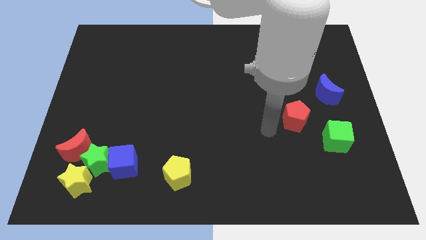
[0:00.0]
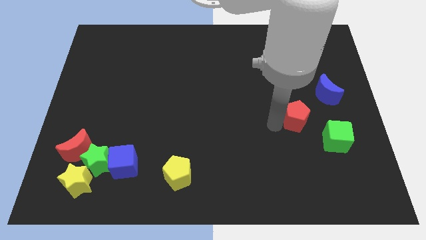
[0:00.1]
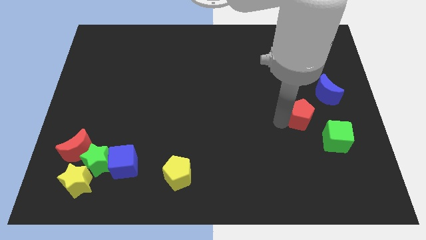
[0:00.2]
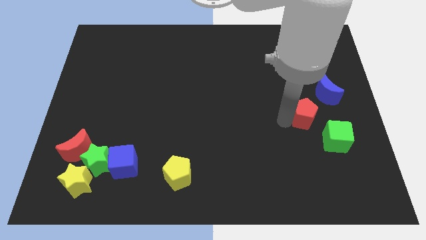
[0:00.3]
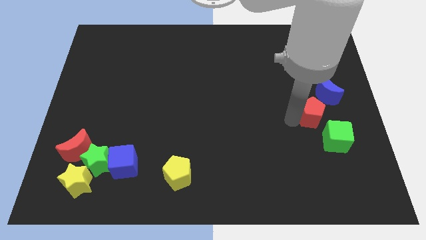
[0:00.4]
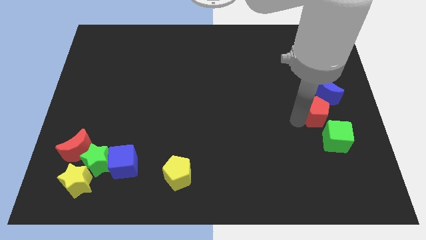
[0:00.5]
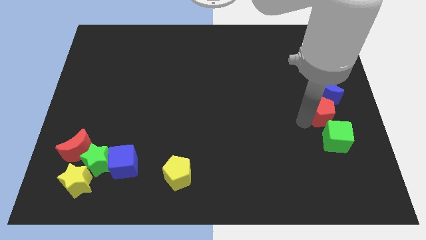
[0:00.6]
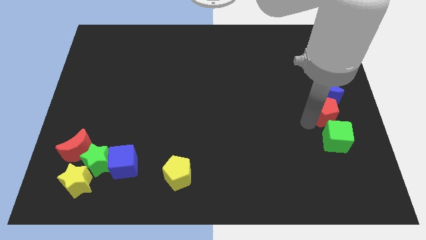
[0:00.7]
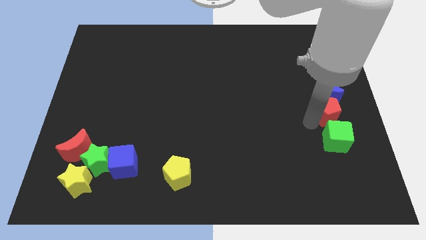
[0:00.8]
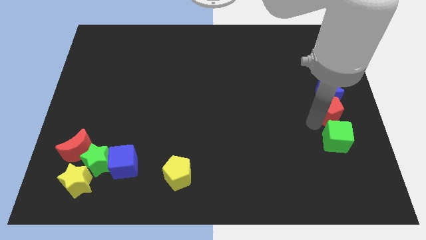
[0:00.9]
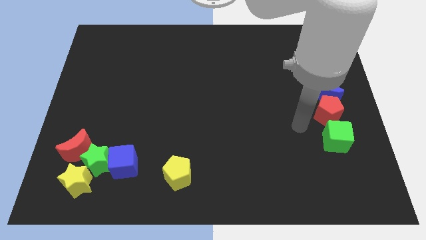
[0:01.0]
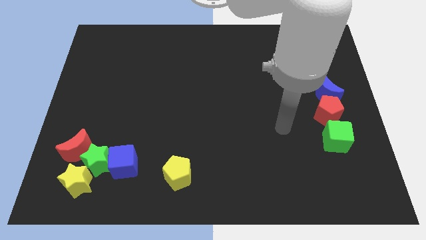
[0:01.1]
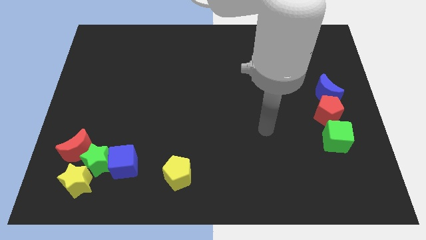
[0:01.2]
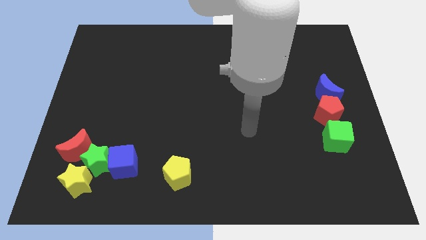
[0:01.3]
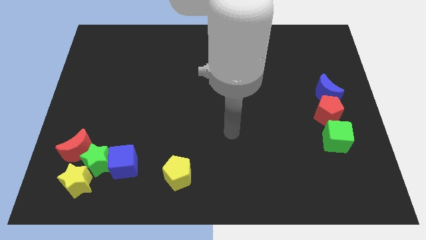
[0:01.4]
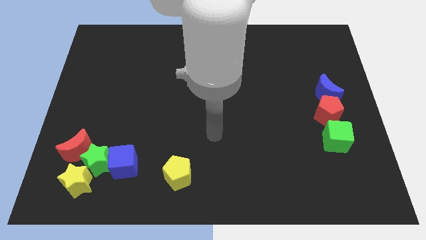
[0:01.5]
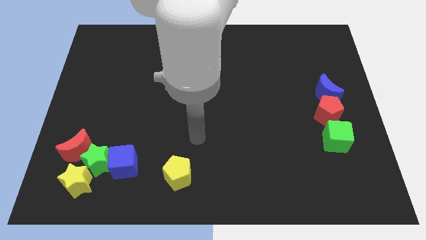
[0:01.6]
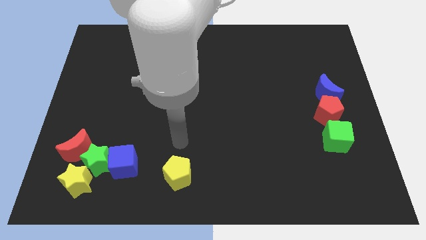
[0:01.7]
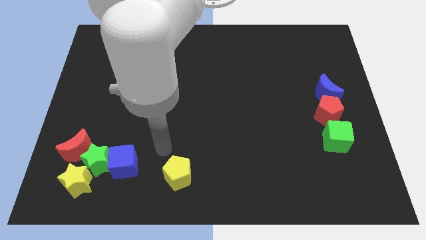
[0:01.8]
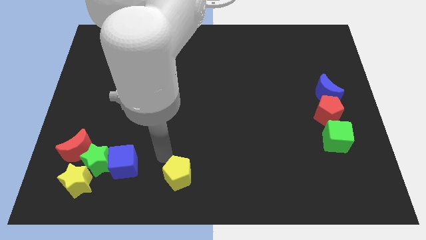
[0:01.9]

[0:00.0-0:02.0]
push the red pentagon in between the green cube and the blue moon

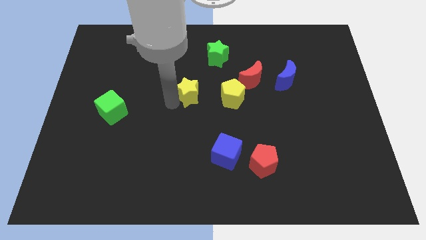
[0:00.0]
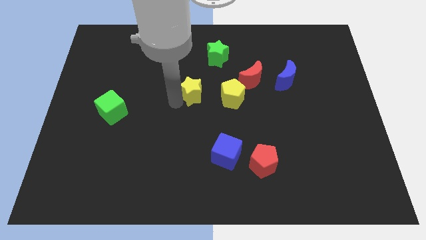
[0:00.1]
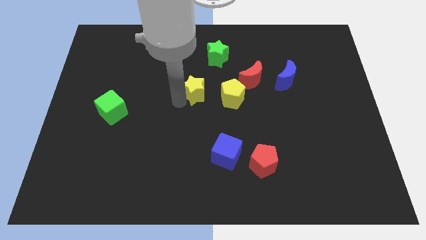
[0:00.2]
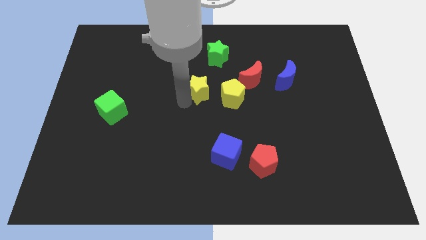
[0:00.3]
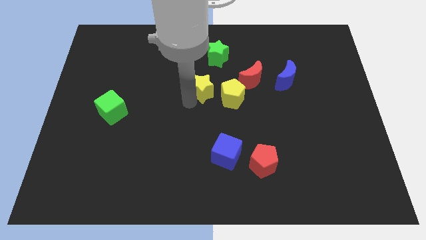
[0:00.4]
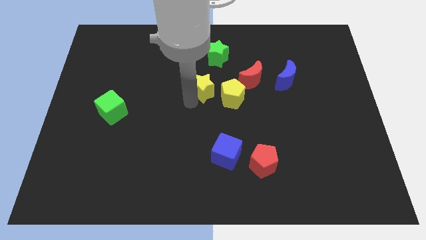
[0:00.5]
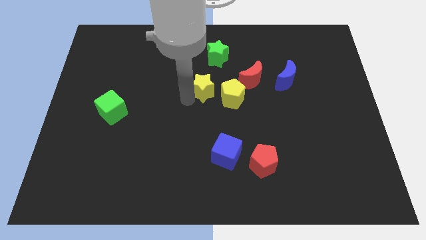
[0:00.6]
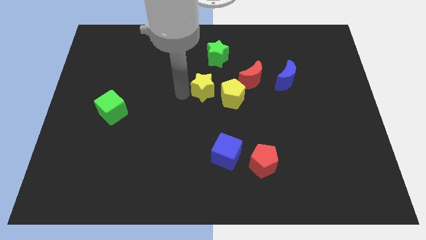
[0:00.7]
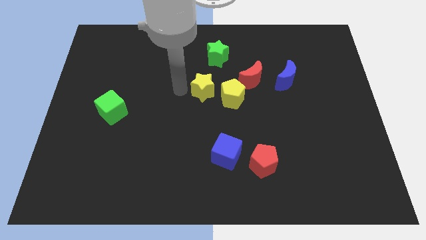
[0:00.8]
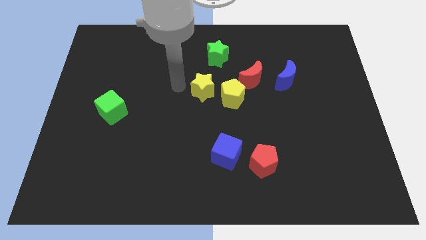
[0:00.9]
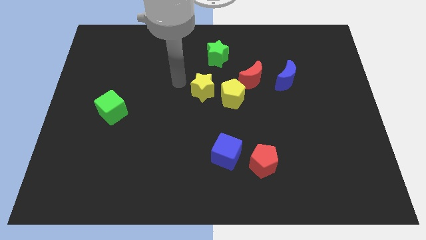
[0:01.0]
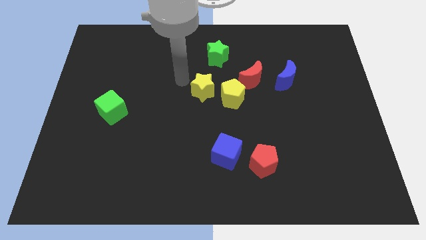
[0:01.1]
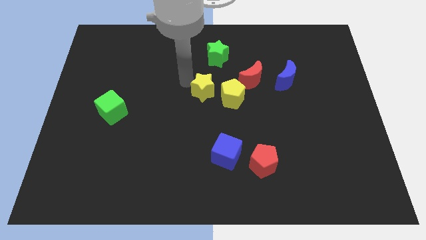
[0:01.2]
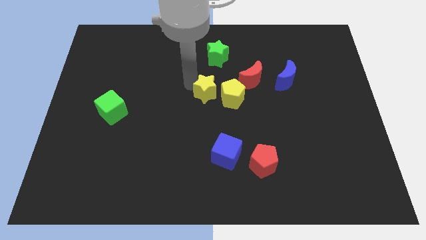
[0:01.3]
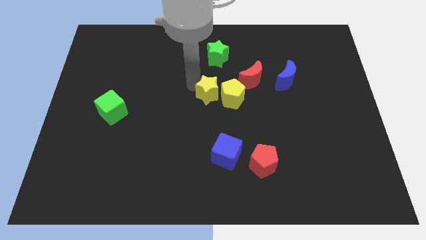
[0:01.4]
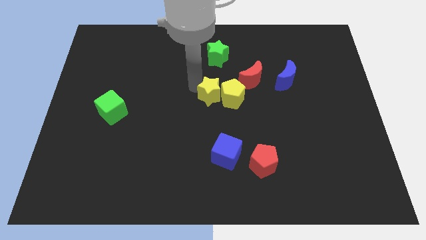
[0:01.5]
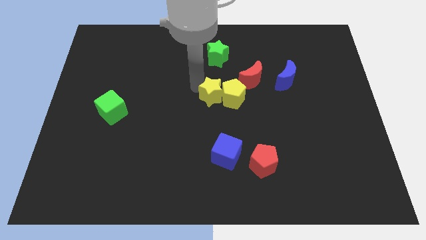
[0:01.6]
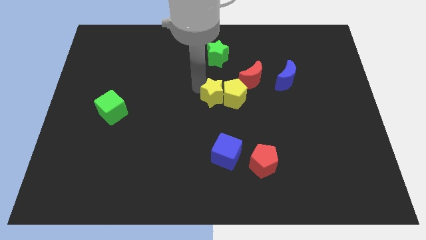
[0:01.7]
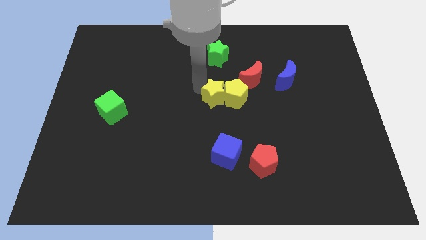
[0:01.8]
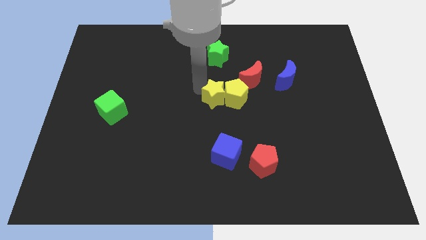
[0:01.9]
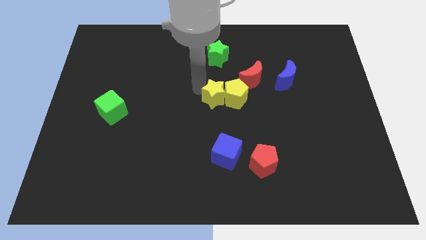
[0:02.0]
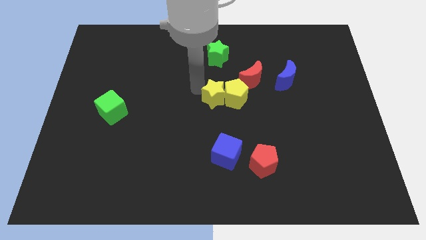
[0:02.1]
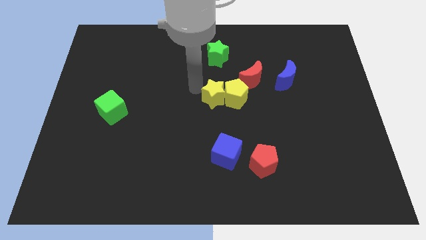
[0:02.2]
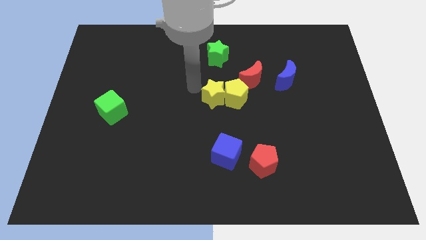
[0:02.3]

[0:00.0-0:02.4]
move yellow star into the yellow pentagon

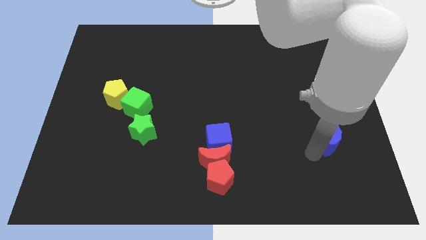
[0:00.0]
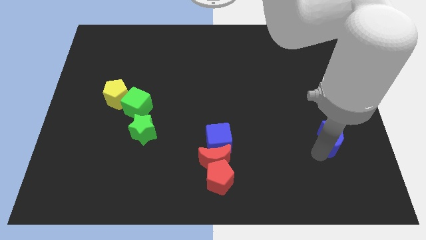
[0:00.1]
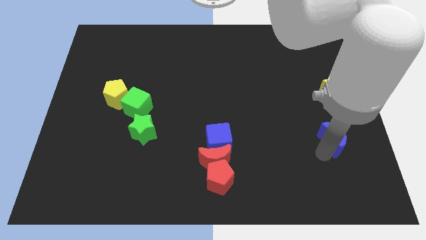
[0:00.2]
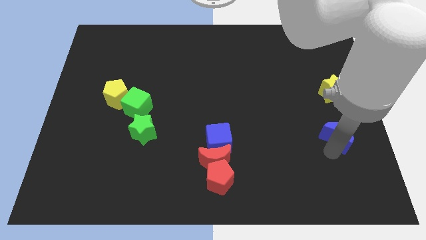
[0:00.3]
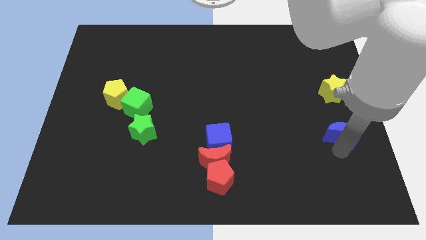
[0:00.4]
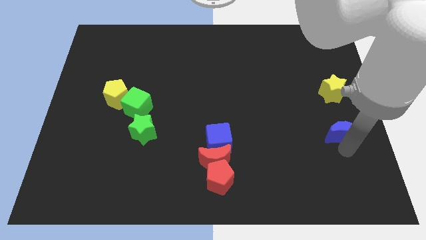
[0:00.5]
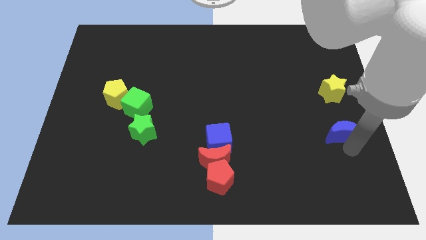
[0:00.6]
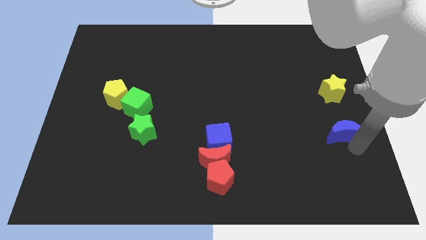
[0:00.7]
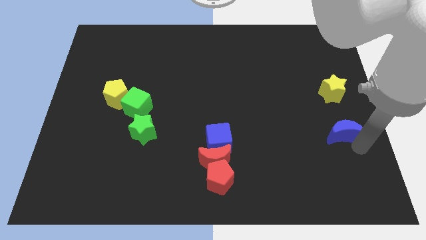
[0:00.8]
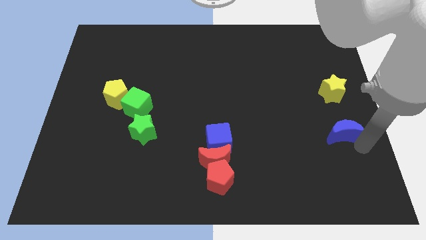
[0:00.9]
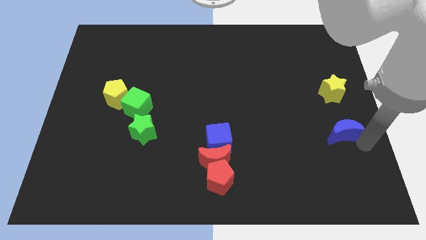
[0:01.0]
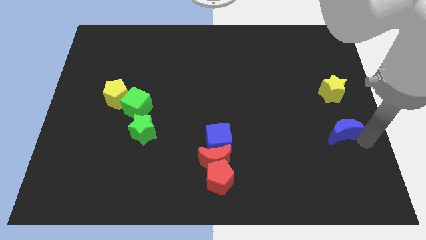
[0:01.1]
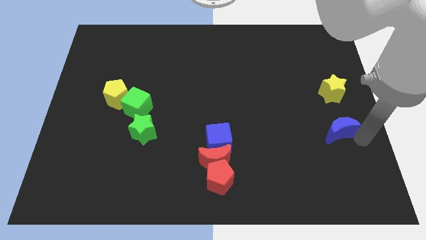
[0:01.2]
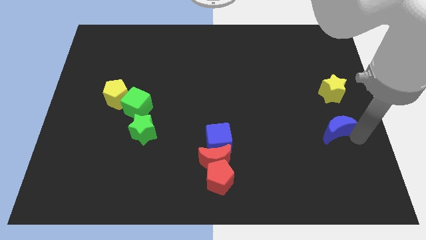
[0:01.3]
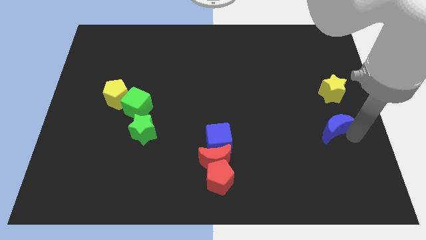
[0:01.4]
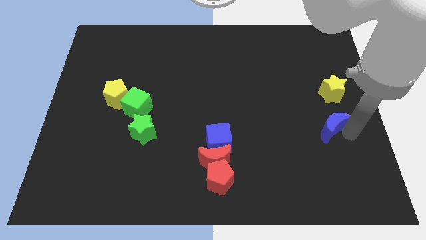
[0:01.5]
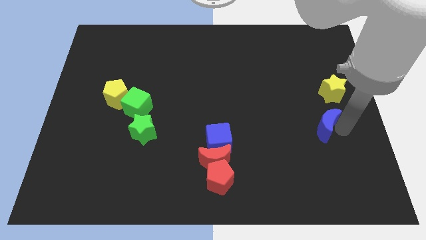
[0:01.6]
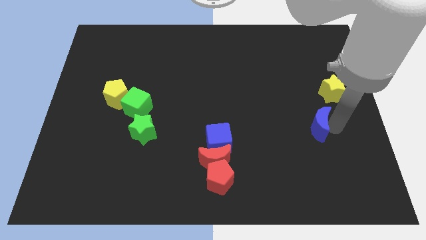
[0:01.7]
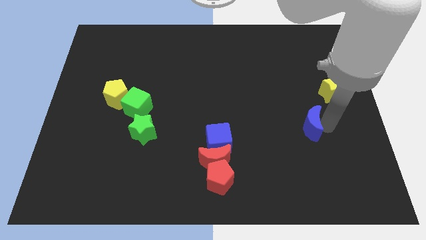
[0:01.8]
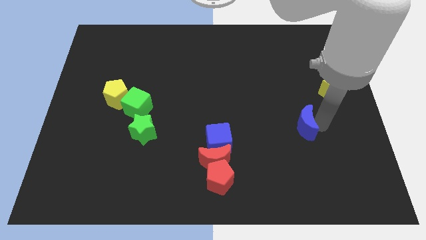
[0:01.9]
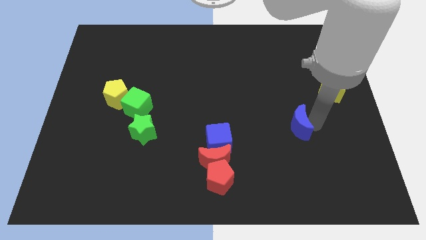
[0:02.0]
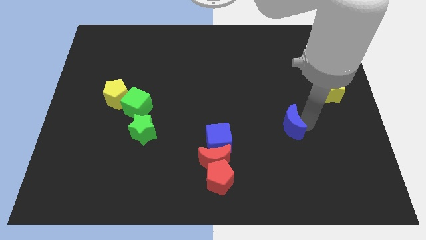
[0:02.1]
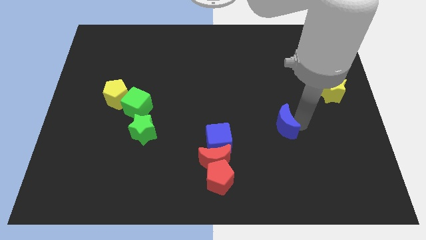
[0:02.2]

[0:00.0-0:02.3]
move the blue crescent towards the bottom of the yellow star

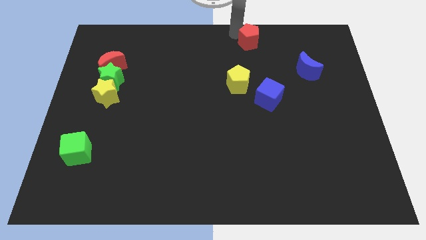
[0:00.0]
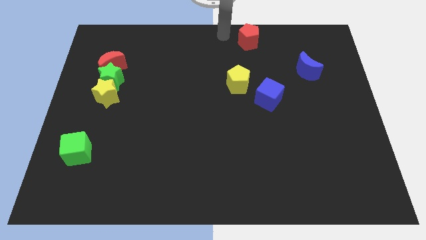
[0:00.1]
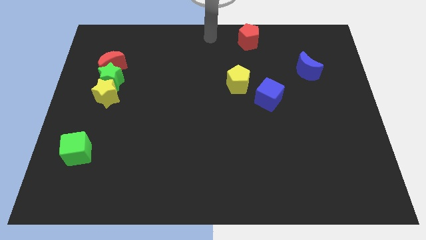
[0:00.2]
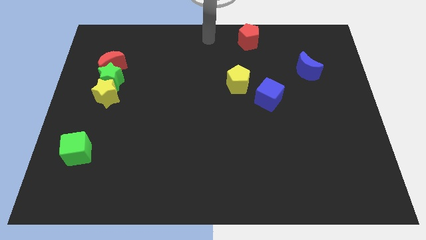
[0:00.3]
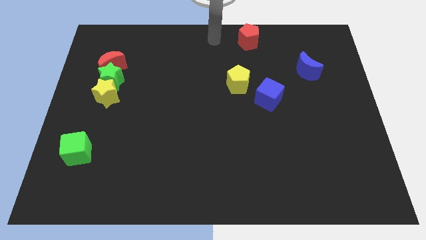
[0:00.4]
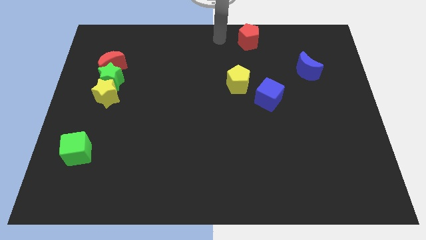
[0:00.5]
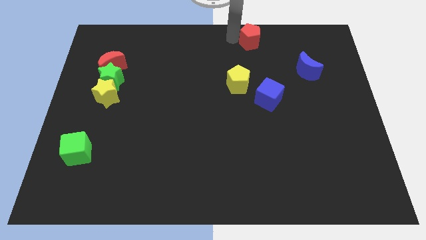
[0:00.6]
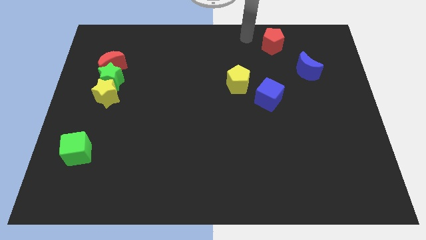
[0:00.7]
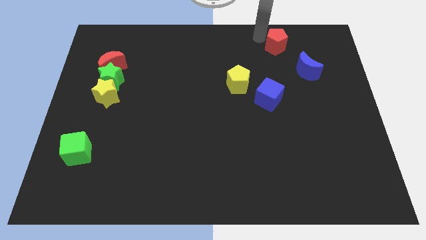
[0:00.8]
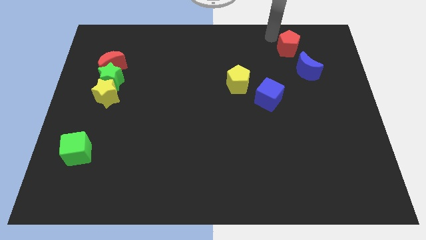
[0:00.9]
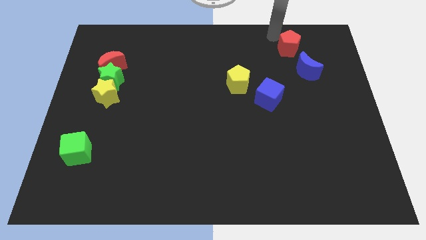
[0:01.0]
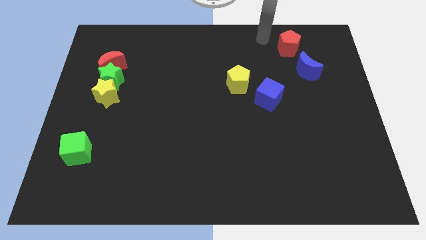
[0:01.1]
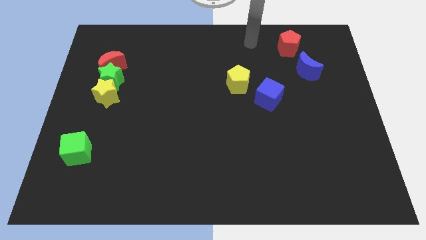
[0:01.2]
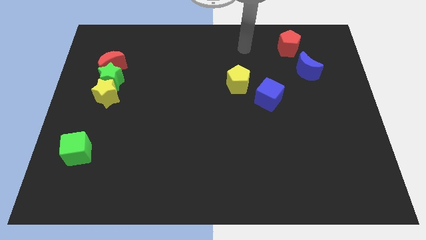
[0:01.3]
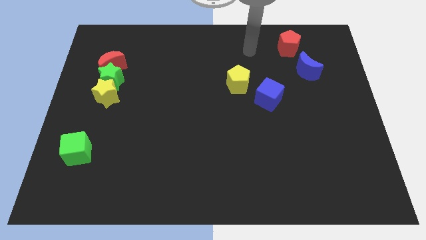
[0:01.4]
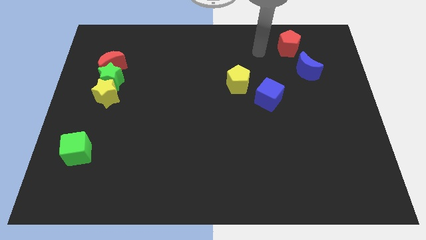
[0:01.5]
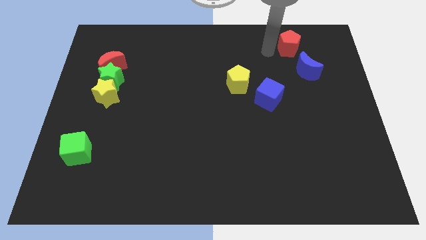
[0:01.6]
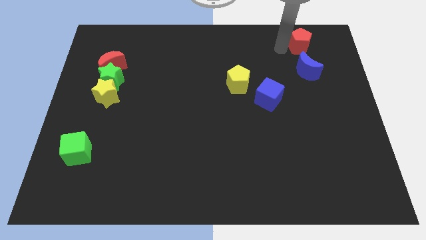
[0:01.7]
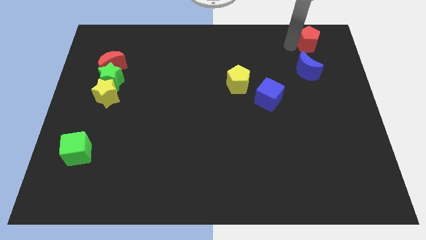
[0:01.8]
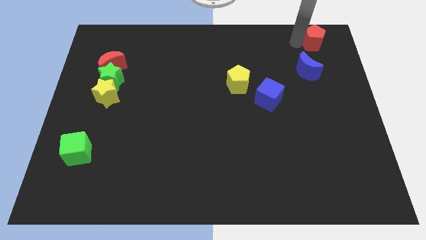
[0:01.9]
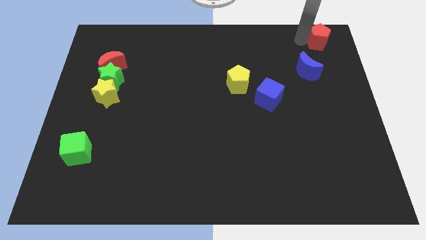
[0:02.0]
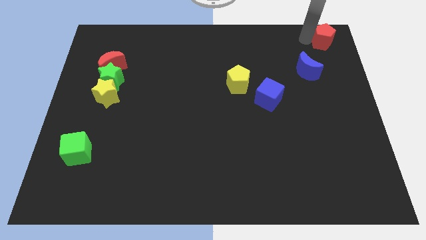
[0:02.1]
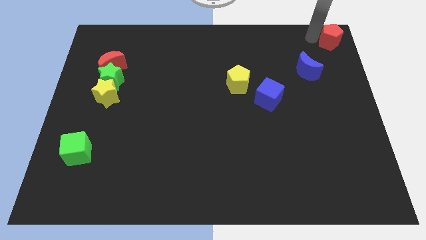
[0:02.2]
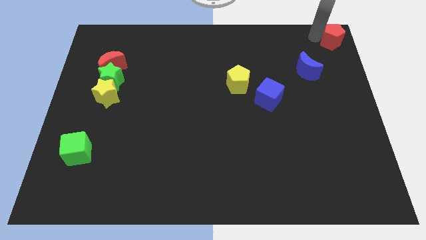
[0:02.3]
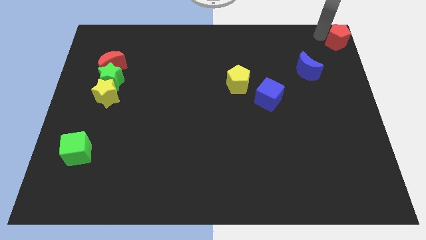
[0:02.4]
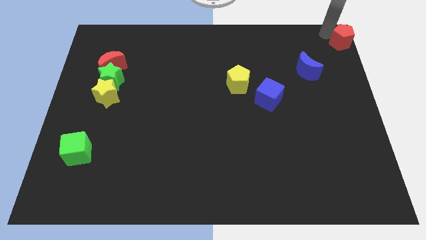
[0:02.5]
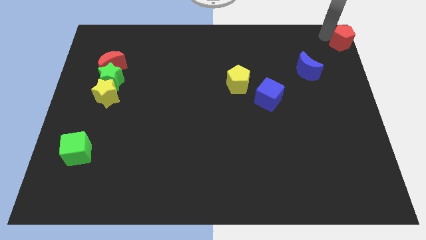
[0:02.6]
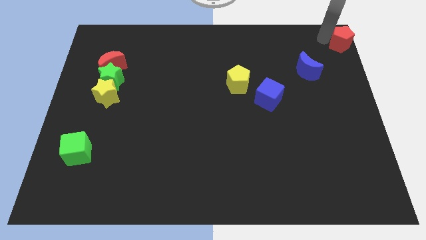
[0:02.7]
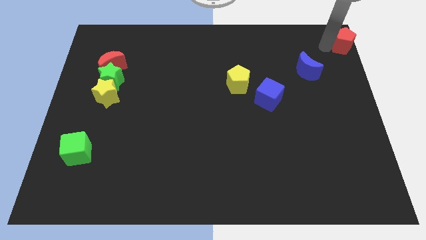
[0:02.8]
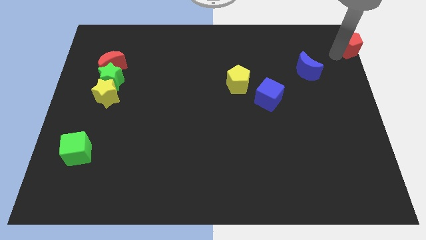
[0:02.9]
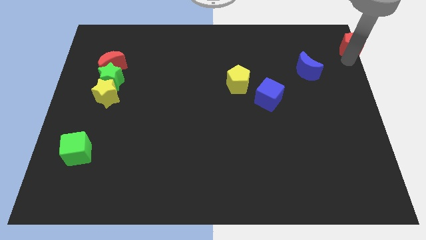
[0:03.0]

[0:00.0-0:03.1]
place red pentagon diagonal right to blue moon
